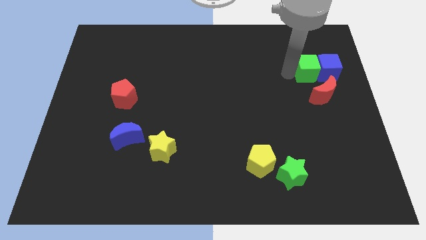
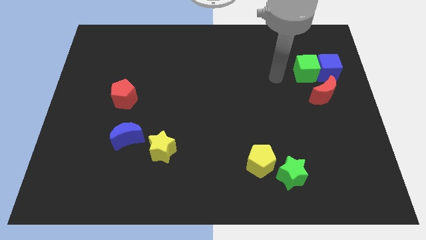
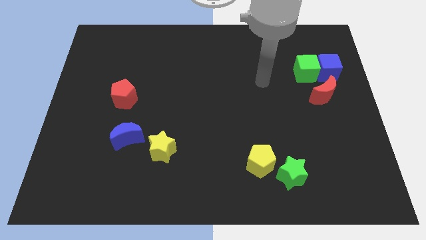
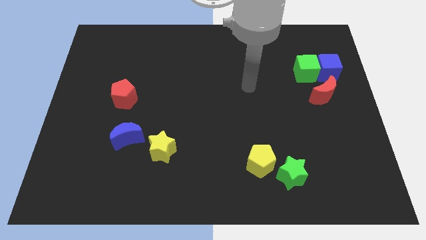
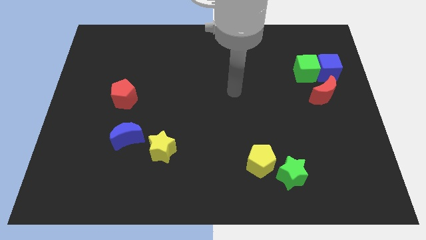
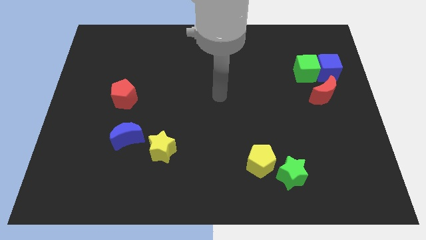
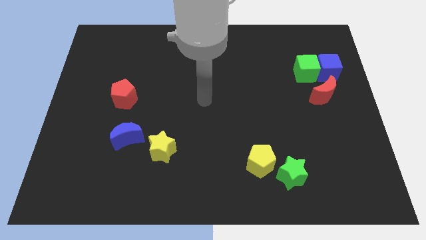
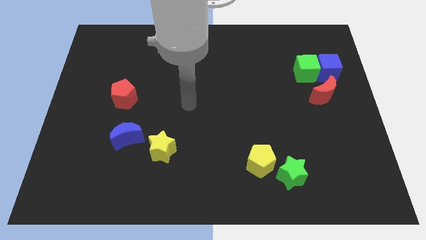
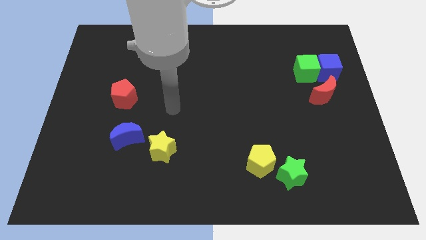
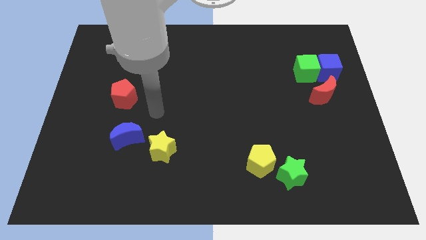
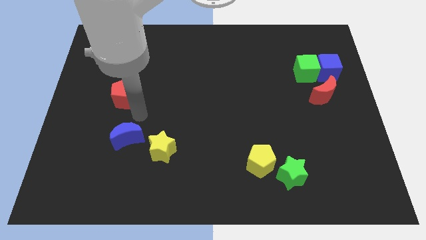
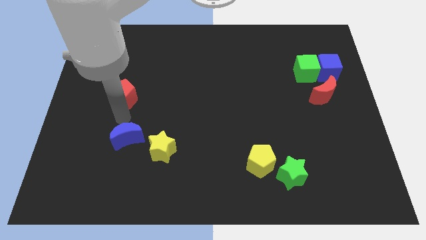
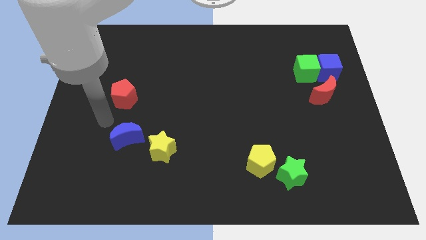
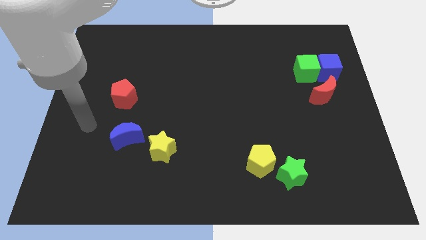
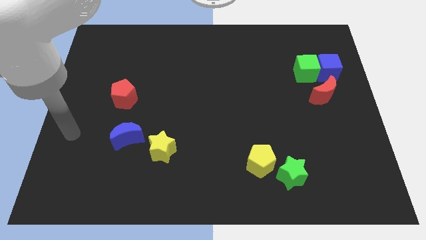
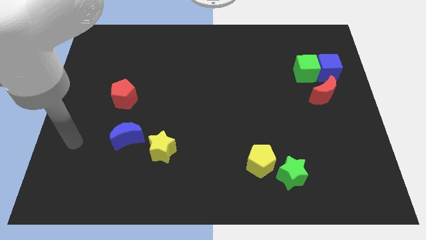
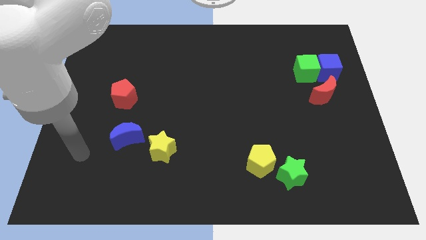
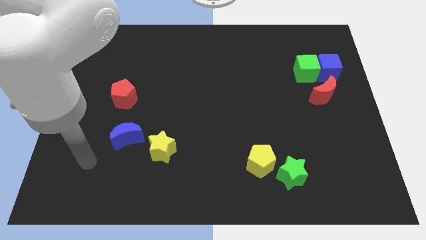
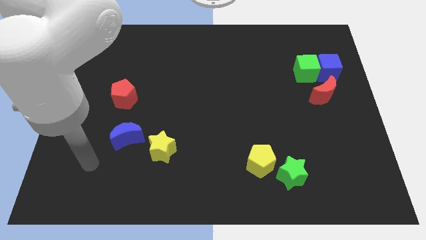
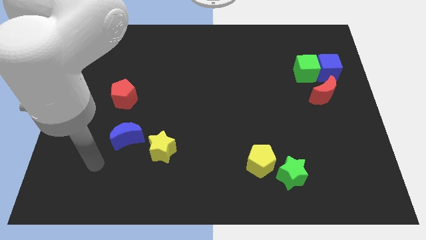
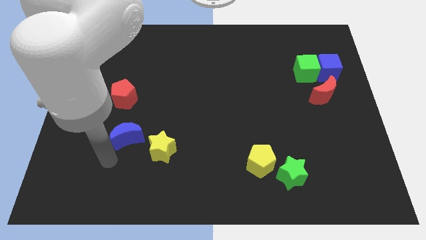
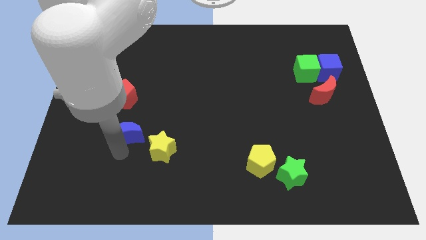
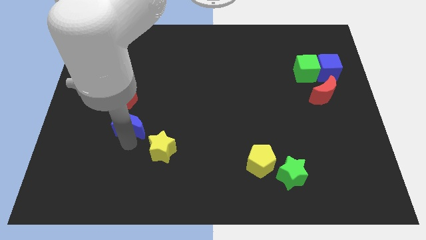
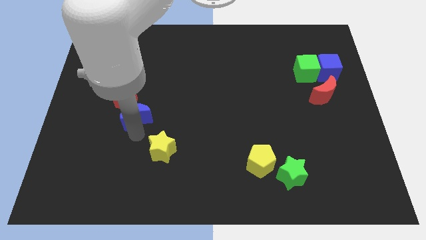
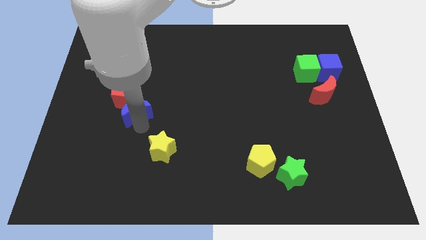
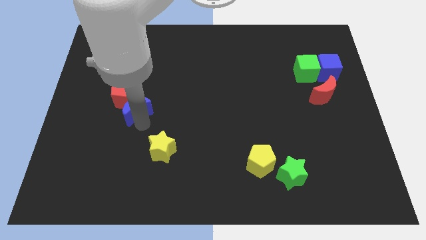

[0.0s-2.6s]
put the blue crescent in between the red pentagon and yellow star

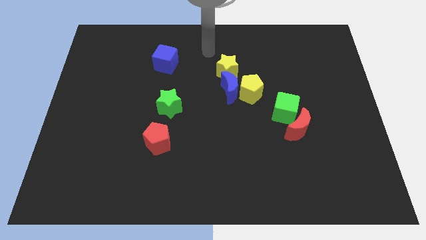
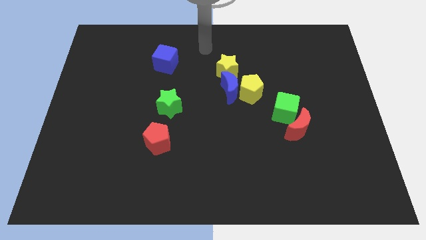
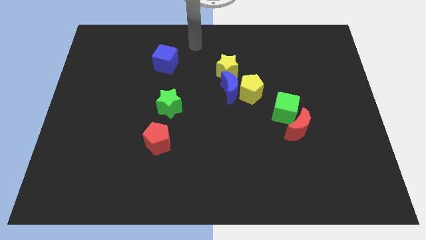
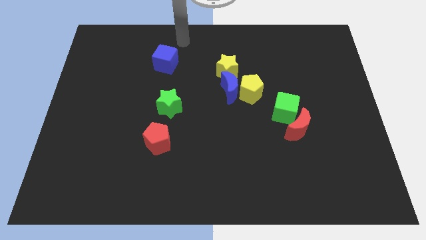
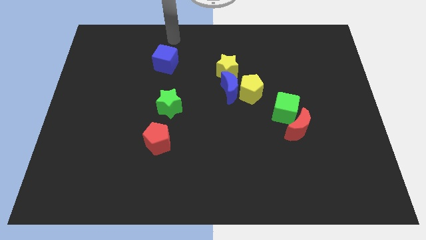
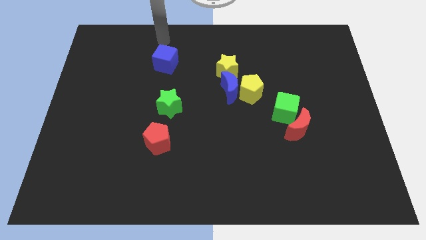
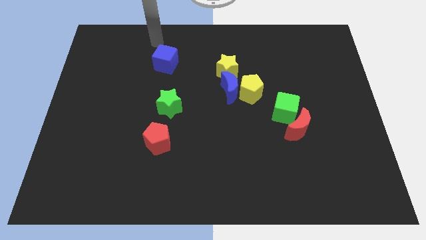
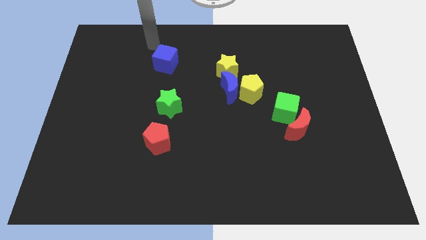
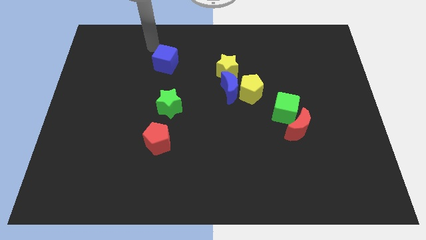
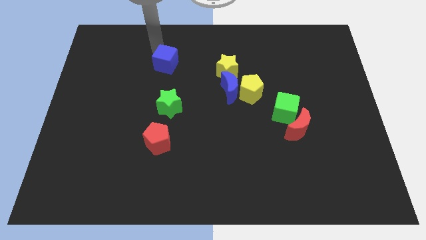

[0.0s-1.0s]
move the arm towards top of blue cube

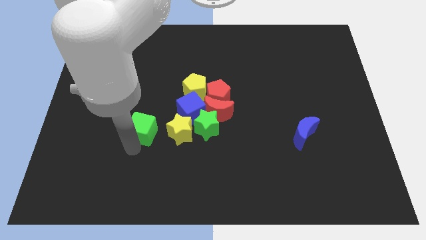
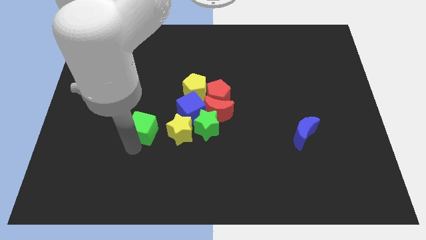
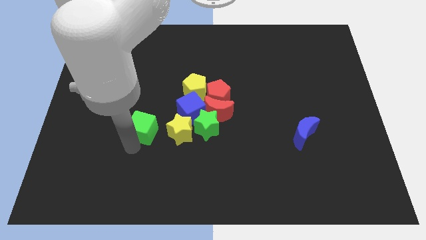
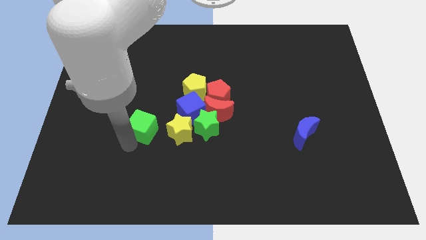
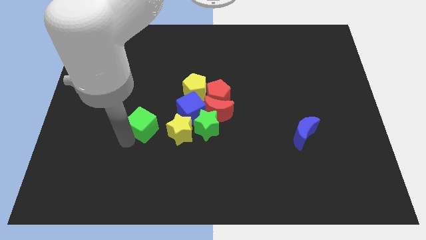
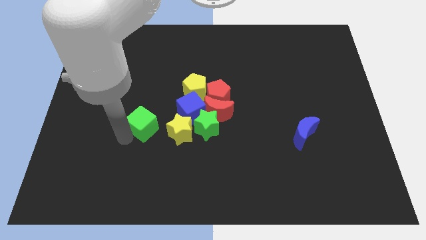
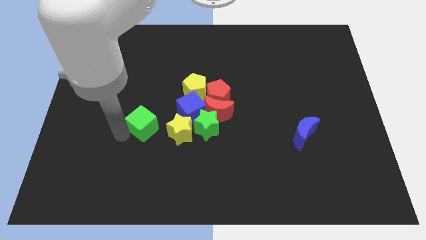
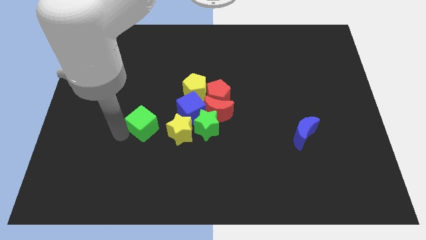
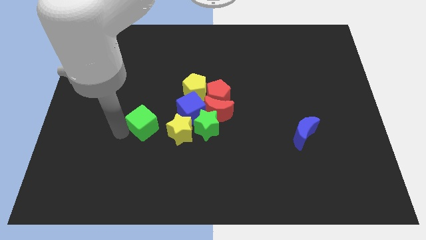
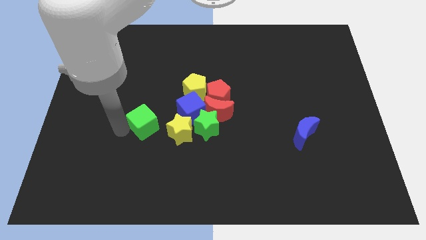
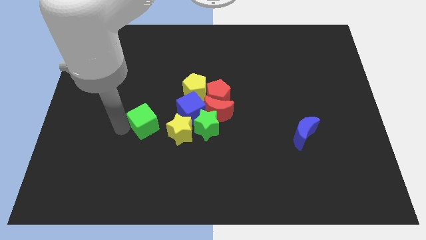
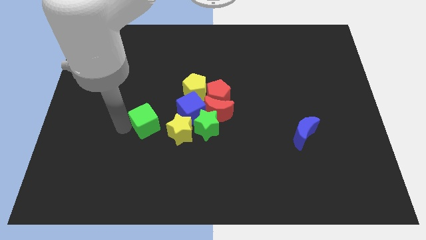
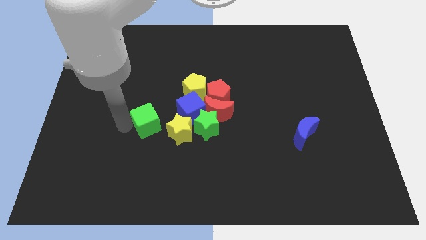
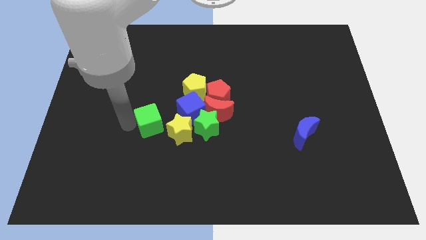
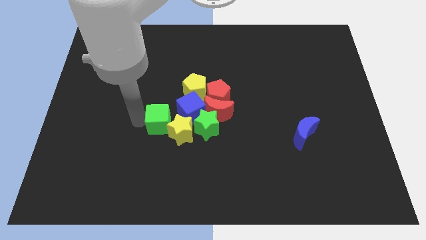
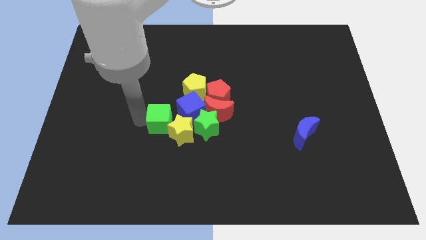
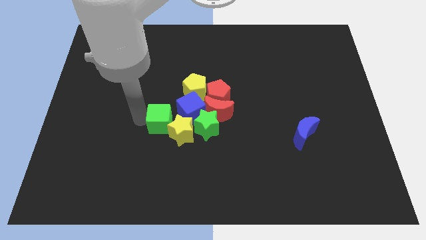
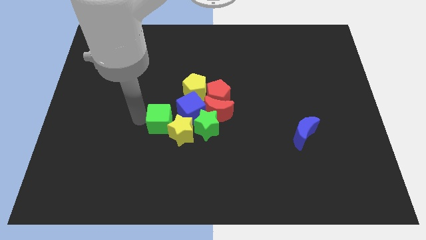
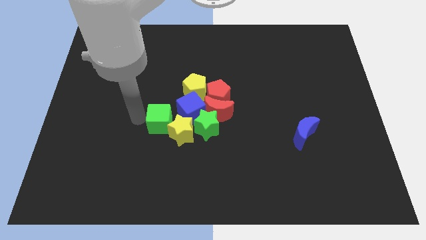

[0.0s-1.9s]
move green cube towards green star

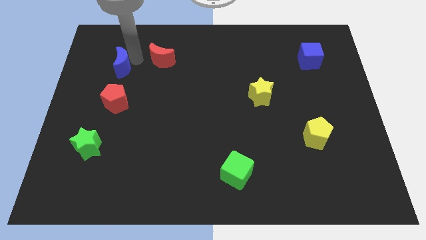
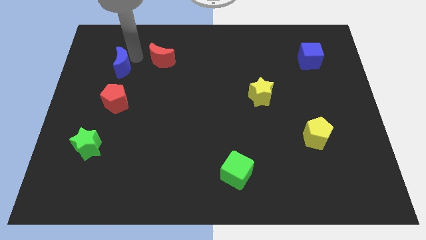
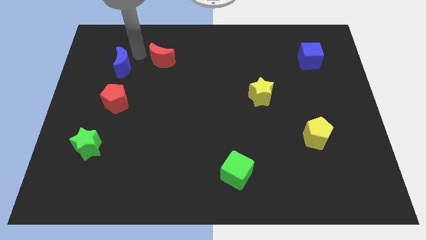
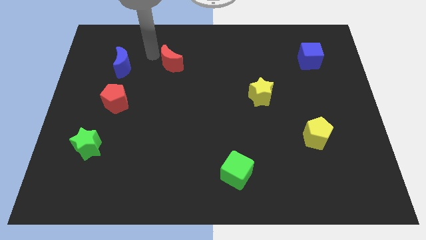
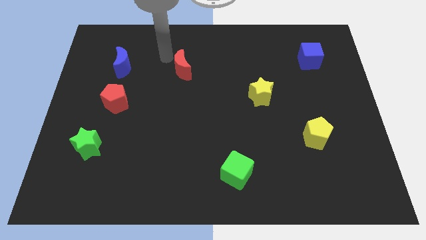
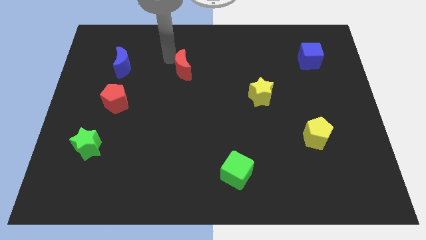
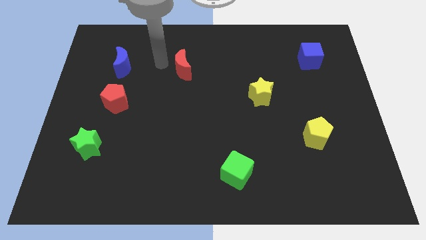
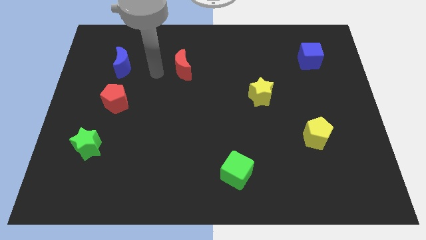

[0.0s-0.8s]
push the red crescent slightly to the right

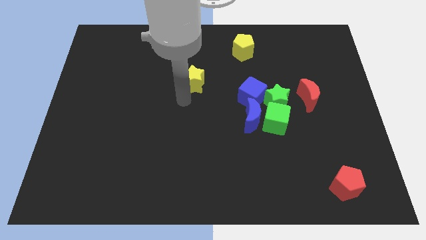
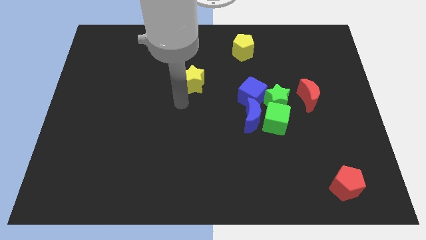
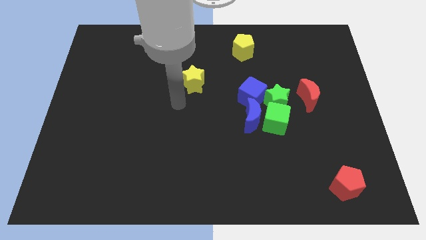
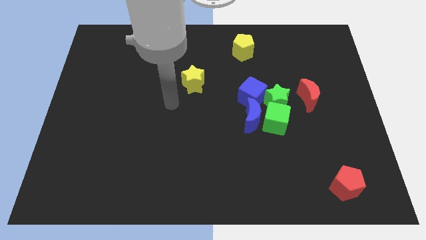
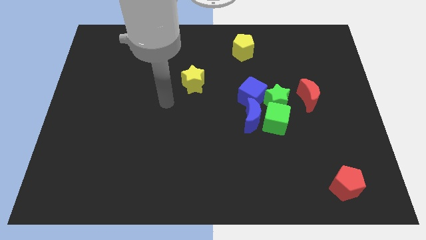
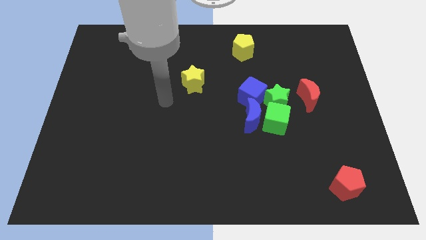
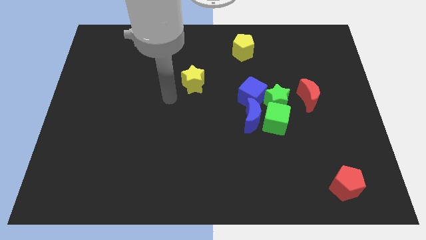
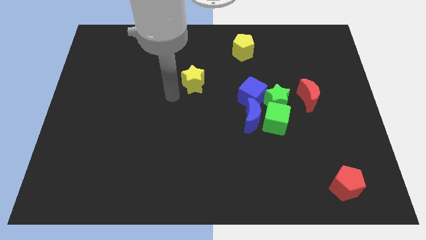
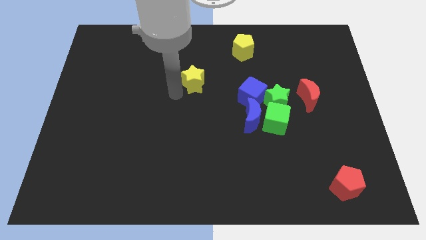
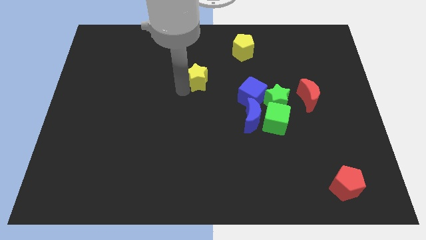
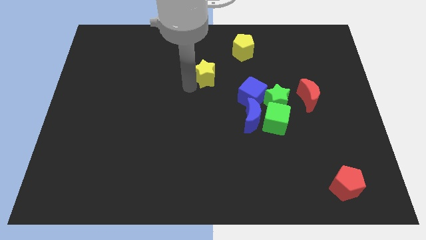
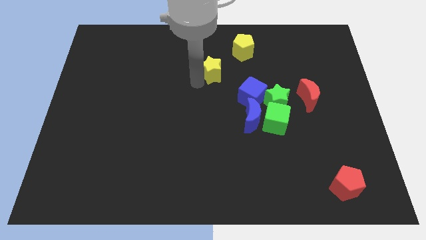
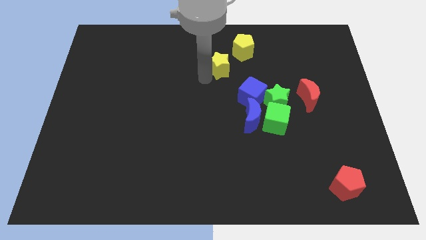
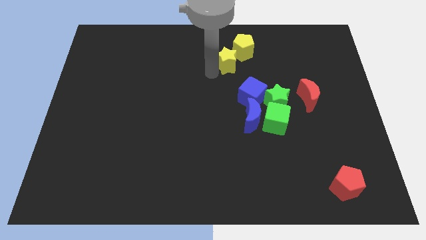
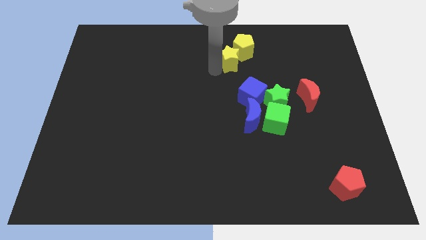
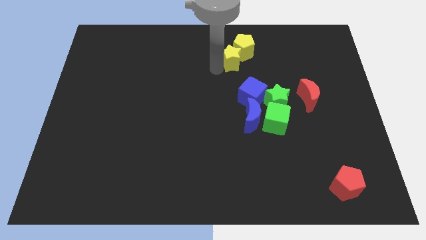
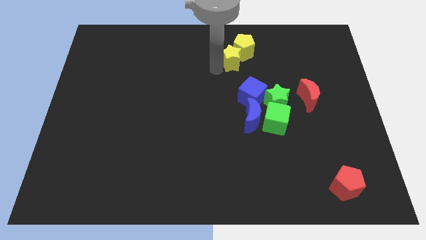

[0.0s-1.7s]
push the yellow star into the yellow pentagon

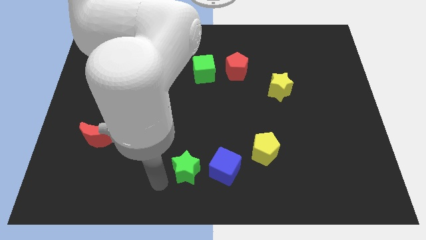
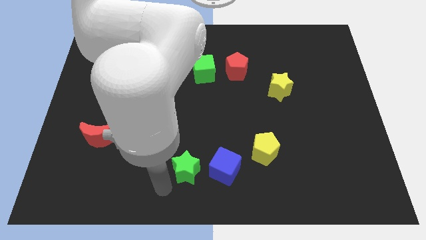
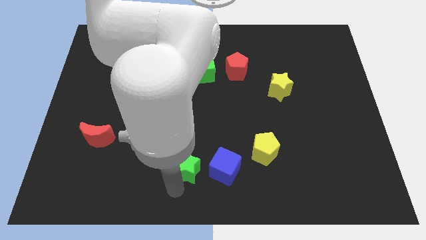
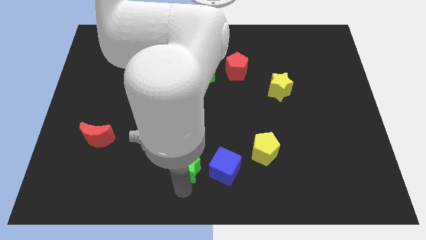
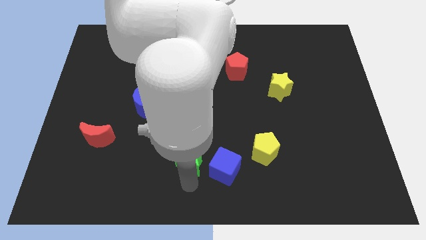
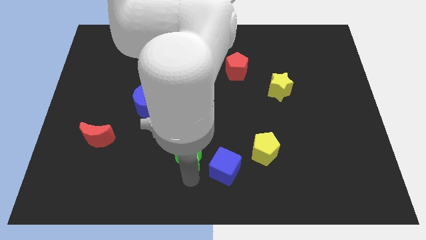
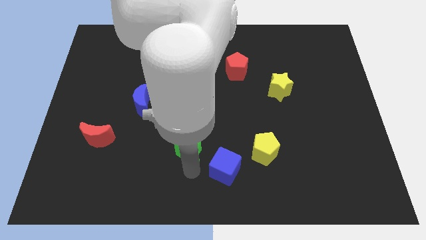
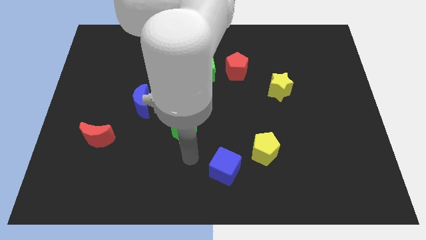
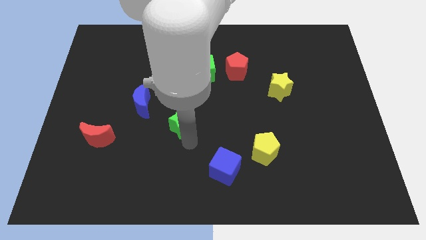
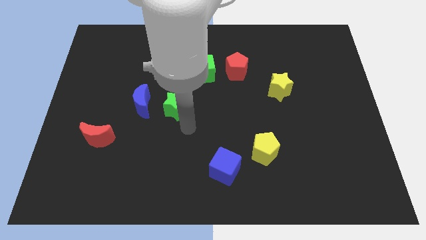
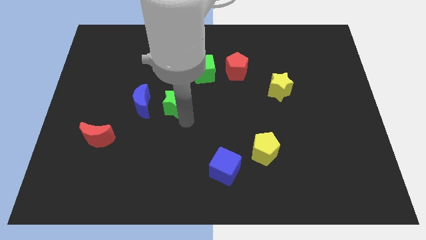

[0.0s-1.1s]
put green star right to blue moon
